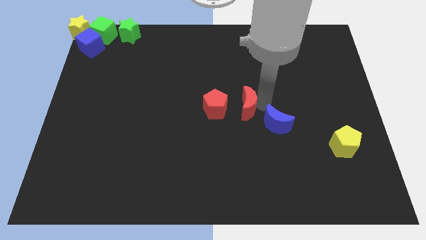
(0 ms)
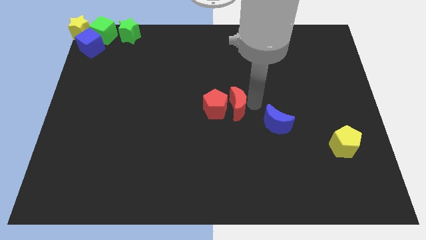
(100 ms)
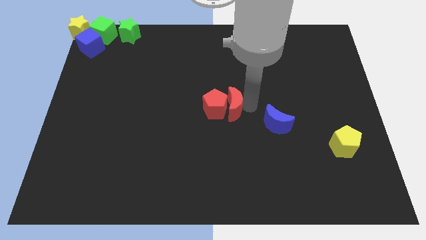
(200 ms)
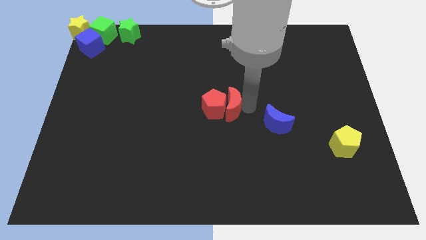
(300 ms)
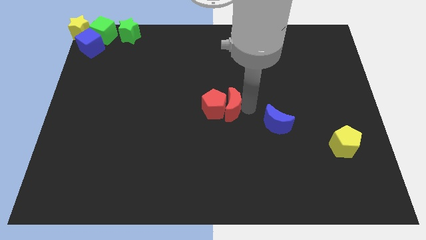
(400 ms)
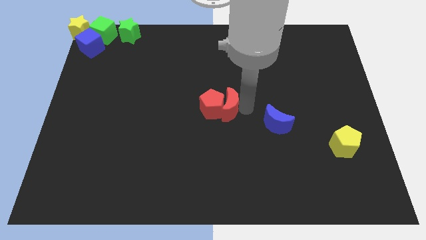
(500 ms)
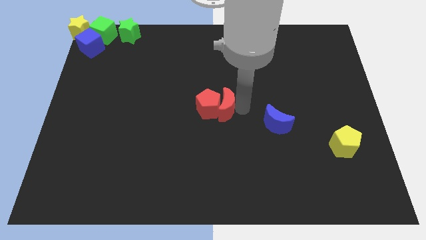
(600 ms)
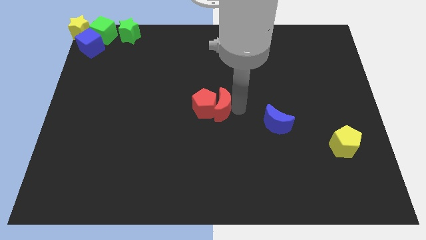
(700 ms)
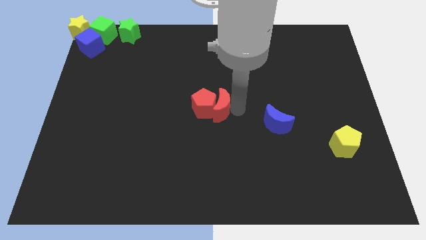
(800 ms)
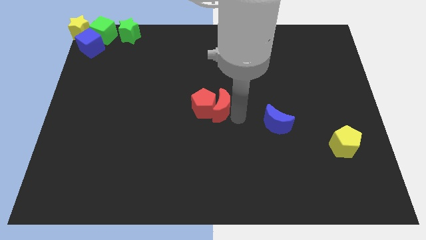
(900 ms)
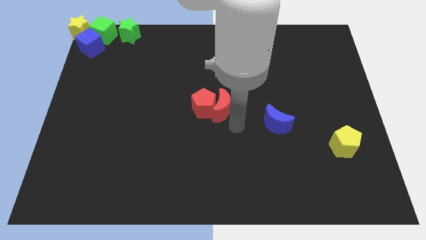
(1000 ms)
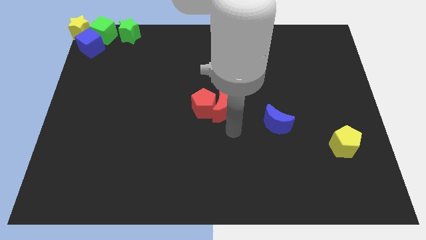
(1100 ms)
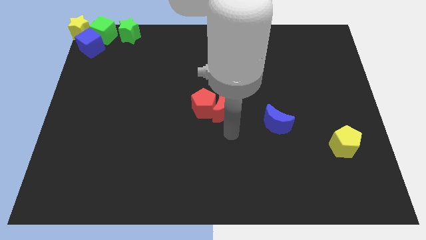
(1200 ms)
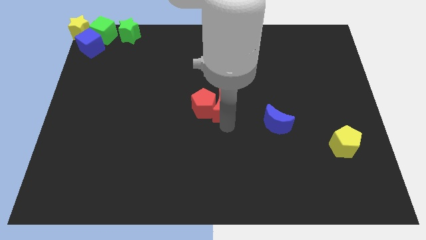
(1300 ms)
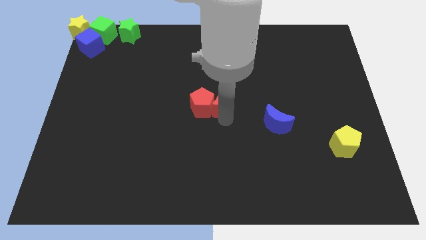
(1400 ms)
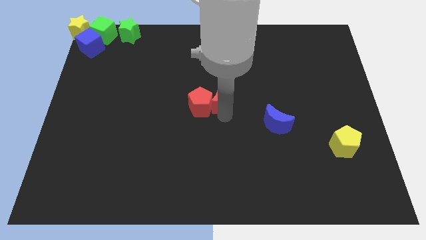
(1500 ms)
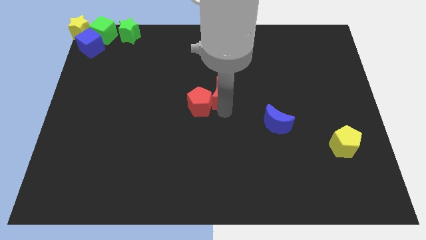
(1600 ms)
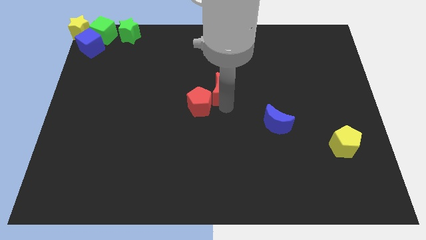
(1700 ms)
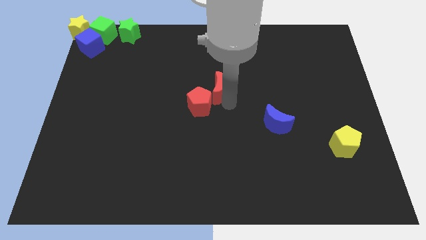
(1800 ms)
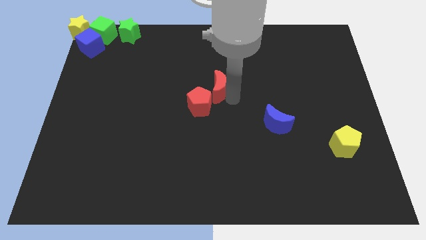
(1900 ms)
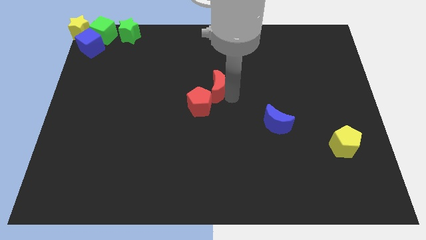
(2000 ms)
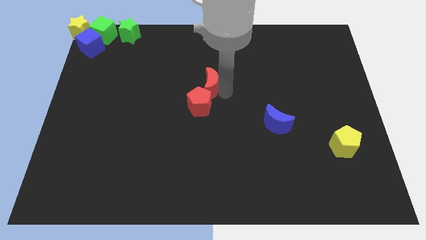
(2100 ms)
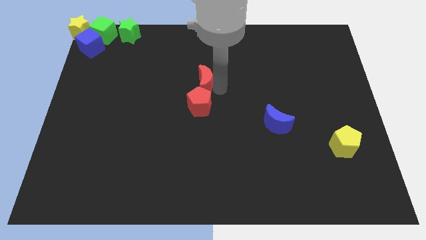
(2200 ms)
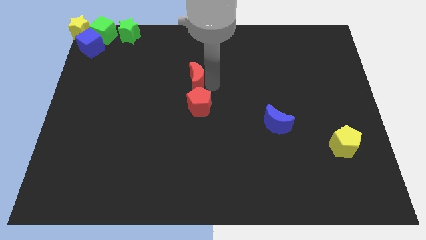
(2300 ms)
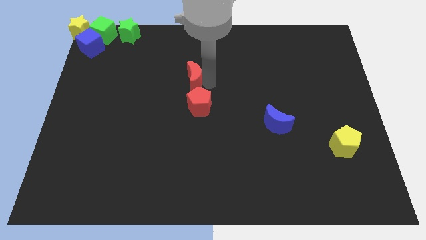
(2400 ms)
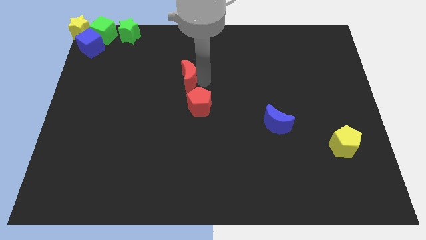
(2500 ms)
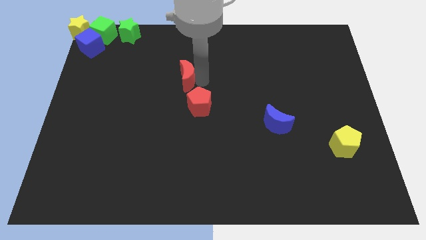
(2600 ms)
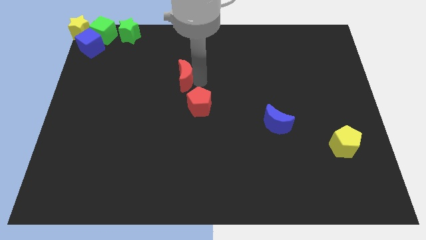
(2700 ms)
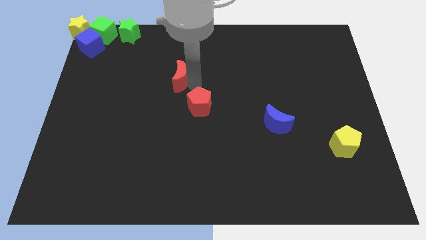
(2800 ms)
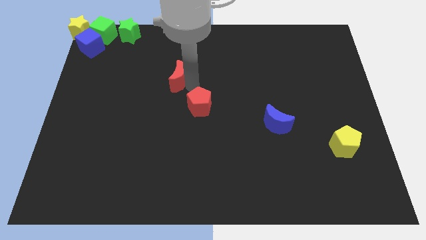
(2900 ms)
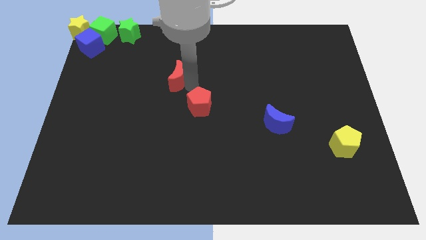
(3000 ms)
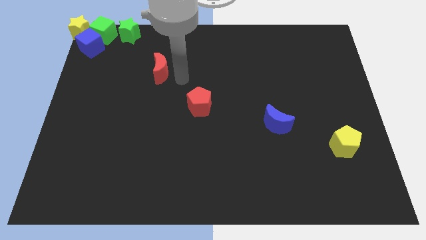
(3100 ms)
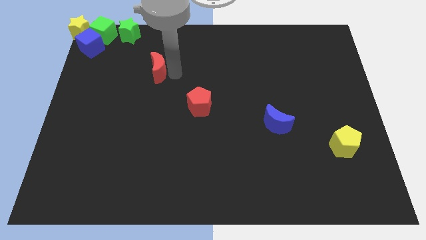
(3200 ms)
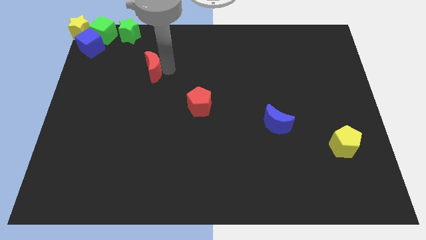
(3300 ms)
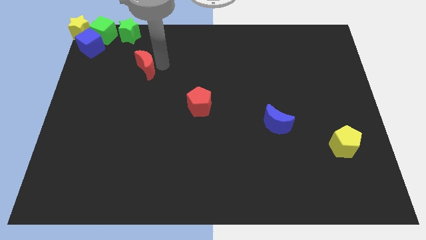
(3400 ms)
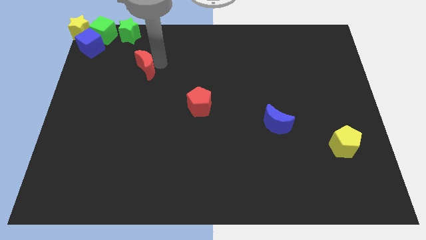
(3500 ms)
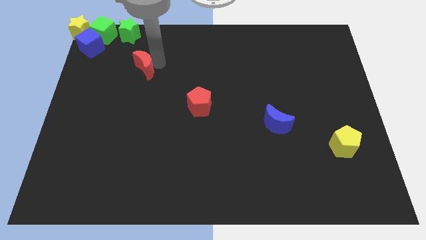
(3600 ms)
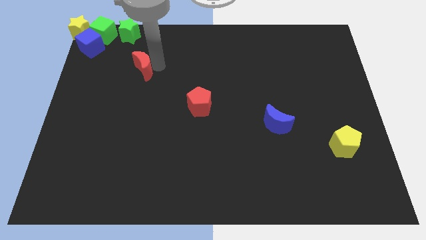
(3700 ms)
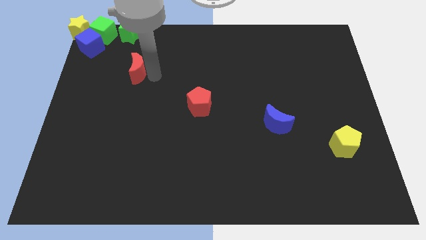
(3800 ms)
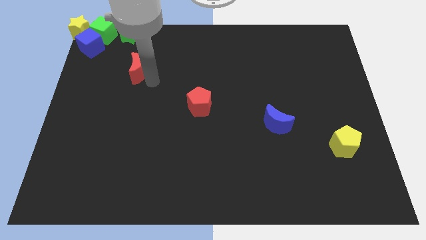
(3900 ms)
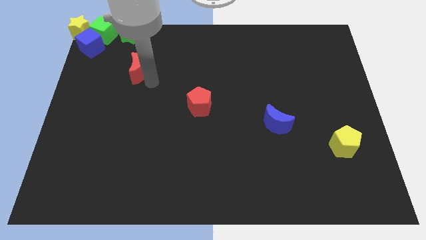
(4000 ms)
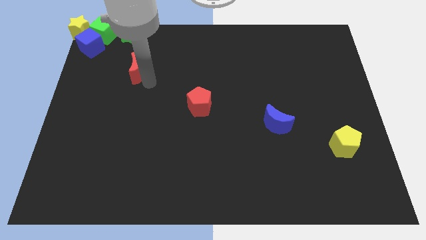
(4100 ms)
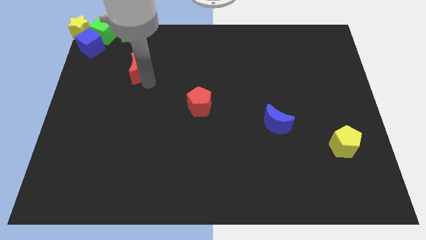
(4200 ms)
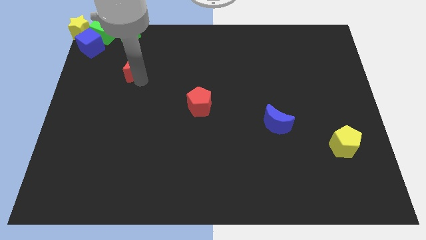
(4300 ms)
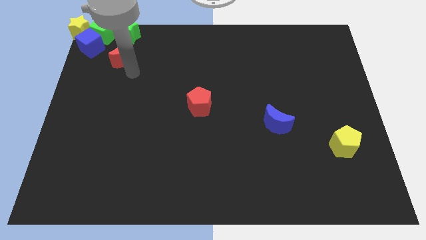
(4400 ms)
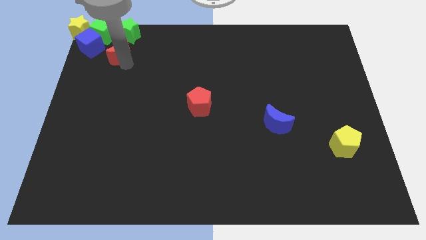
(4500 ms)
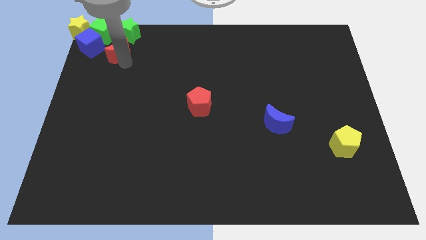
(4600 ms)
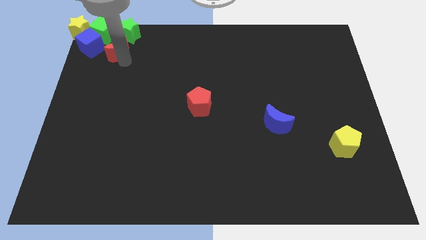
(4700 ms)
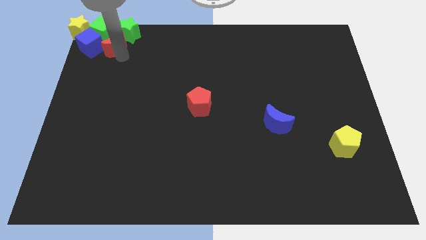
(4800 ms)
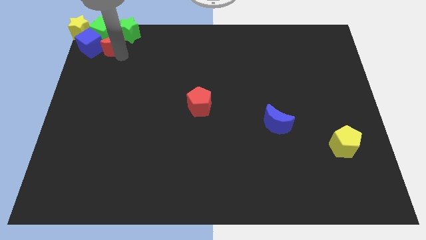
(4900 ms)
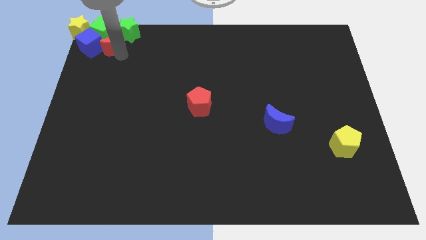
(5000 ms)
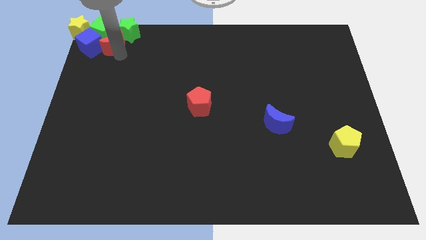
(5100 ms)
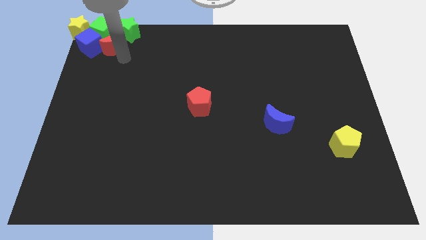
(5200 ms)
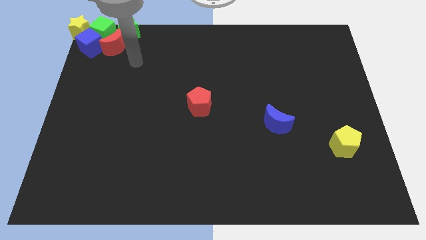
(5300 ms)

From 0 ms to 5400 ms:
push the red crescent towards the right side of the blue cube

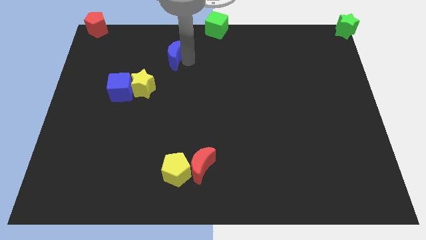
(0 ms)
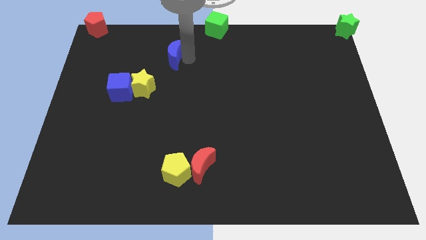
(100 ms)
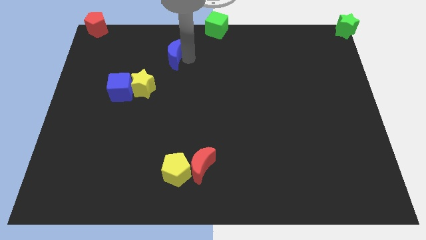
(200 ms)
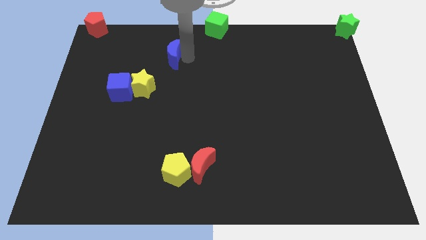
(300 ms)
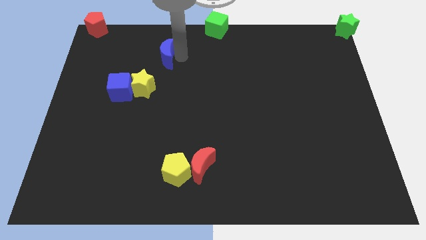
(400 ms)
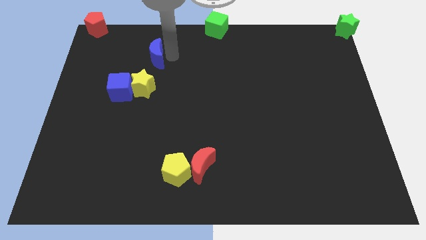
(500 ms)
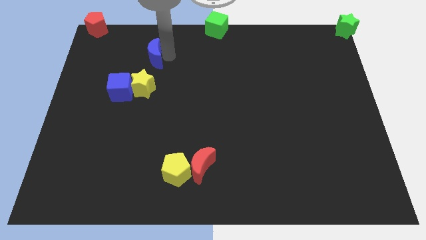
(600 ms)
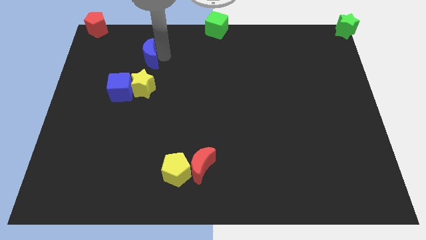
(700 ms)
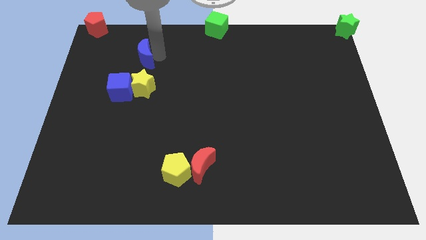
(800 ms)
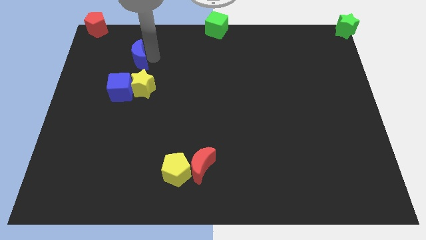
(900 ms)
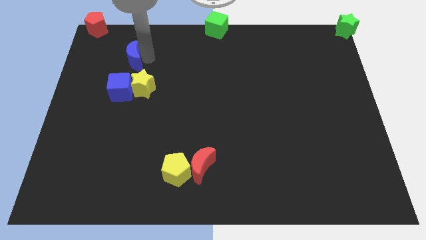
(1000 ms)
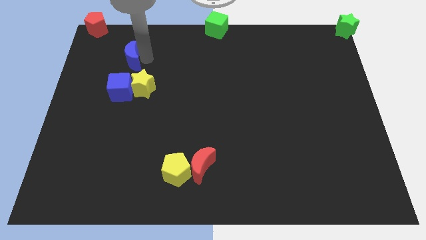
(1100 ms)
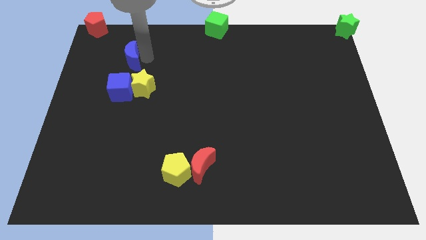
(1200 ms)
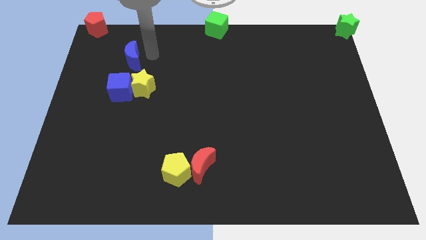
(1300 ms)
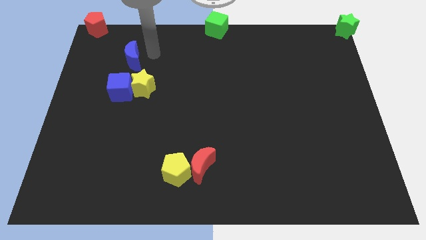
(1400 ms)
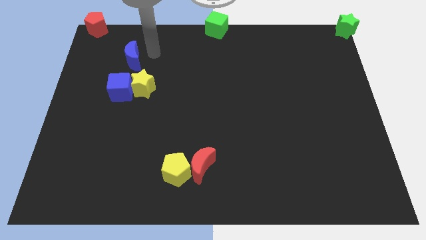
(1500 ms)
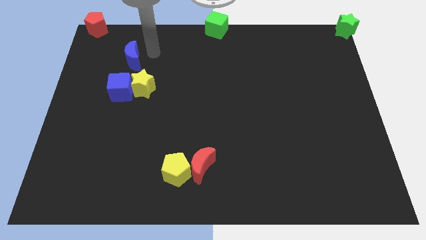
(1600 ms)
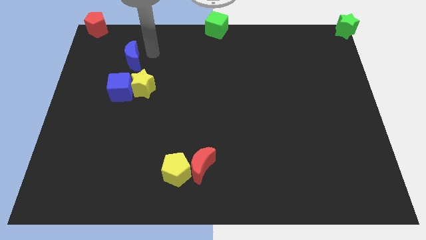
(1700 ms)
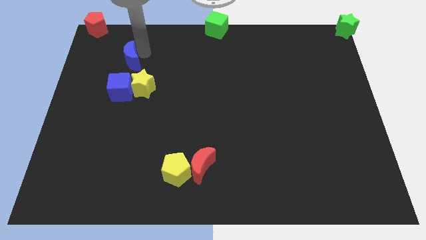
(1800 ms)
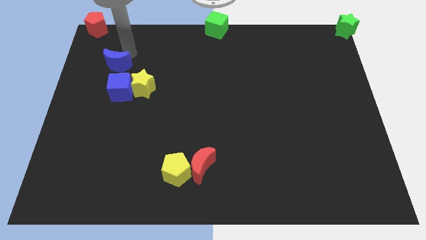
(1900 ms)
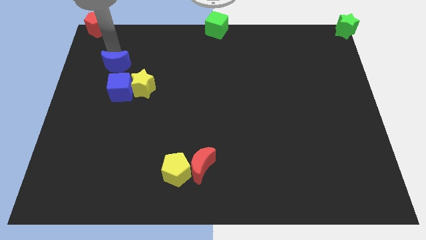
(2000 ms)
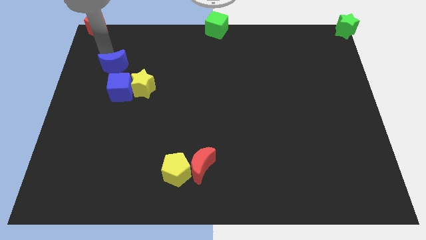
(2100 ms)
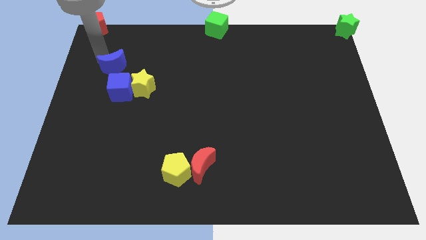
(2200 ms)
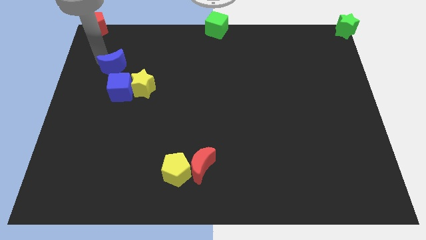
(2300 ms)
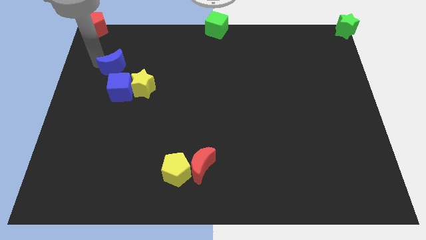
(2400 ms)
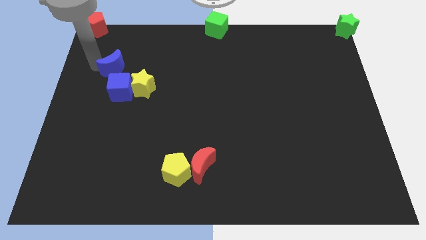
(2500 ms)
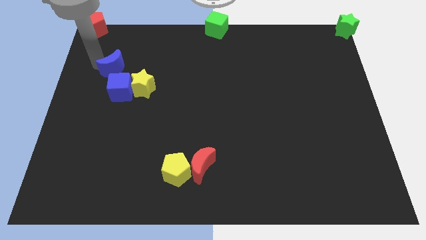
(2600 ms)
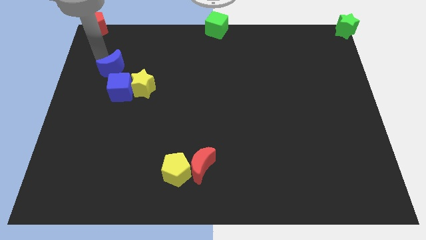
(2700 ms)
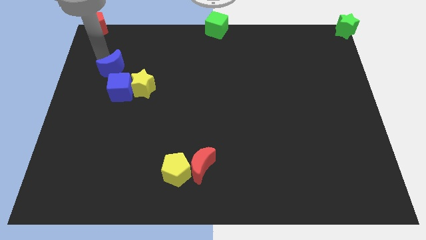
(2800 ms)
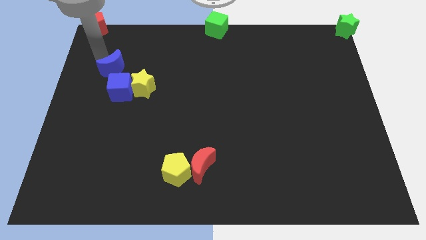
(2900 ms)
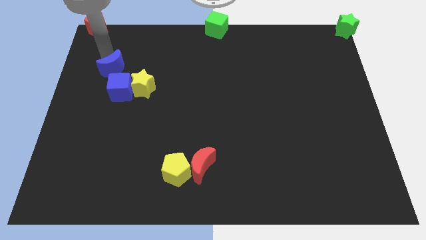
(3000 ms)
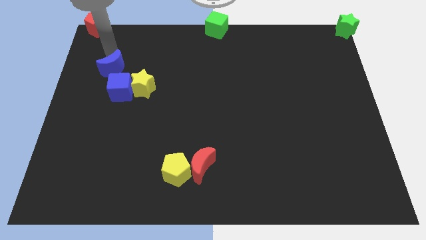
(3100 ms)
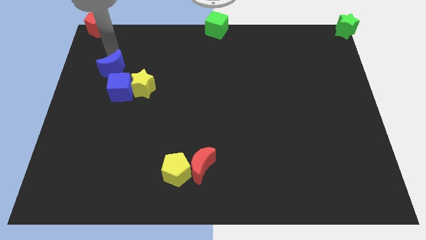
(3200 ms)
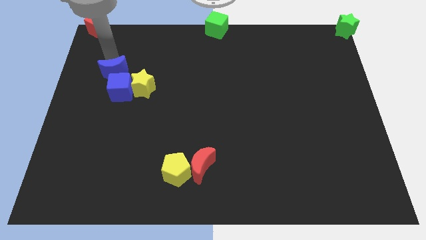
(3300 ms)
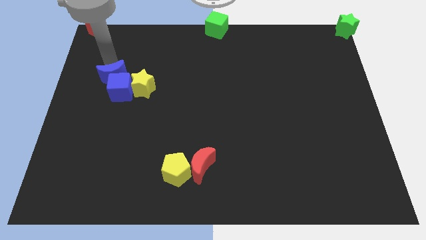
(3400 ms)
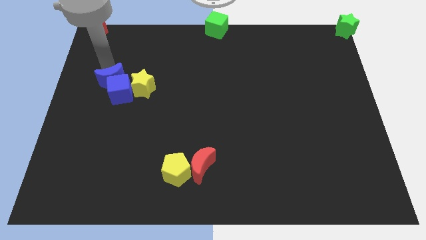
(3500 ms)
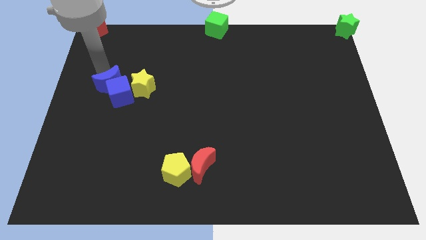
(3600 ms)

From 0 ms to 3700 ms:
push the blue moon into the blue cube

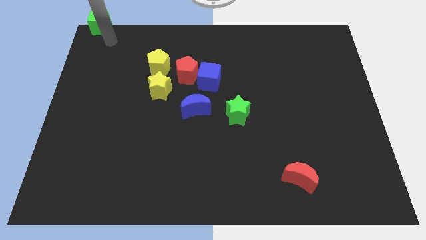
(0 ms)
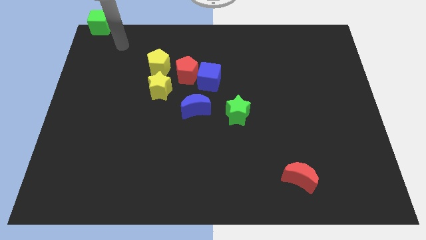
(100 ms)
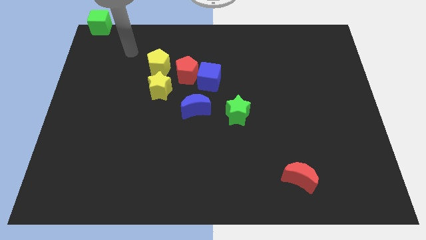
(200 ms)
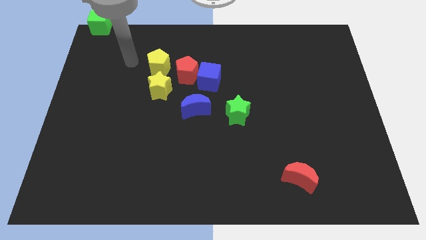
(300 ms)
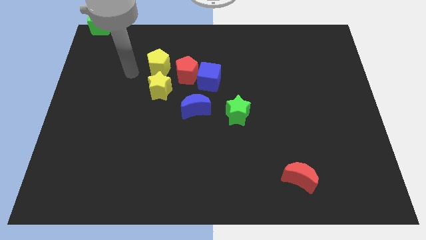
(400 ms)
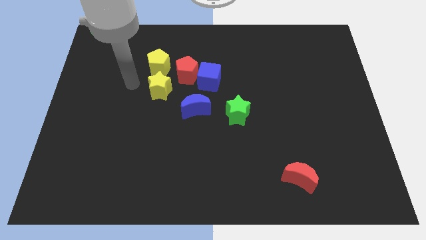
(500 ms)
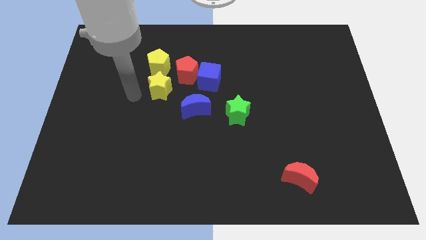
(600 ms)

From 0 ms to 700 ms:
point your arm to the left side of yellow star
